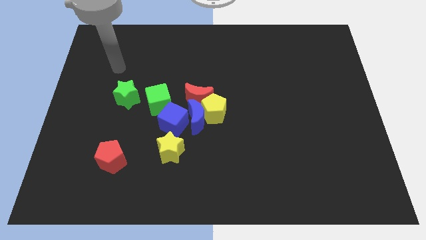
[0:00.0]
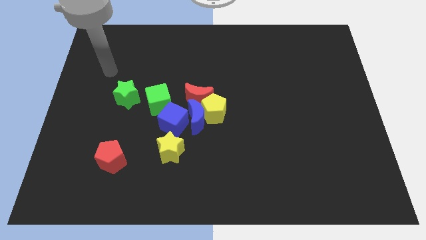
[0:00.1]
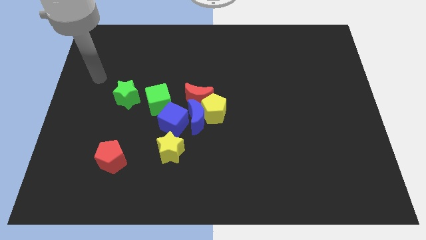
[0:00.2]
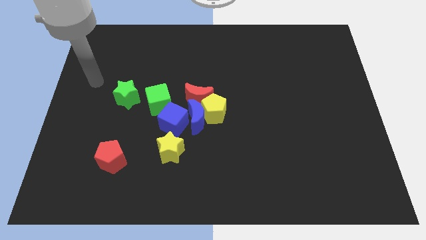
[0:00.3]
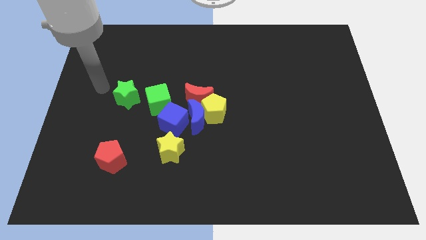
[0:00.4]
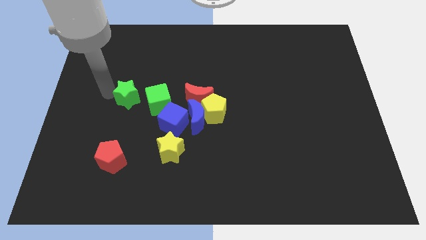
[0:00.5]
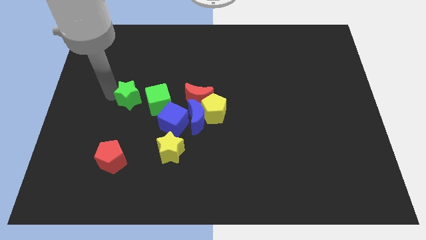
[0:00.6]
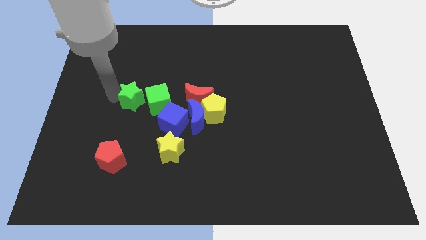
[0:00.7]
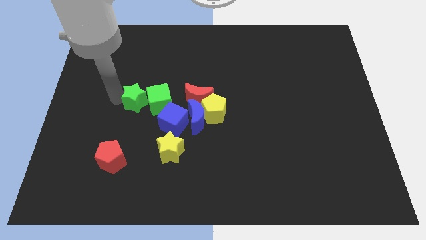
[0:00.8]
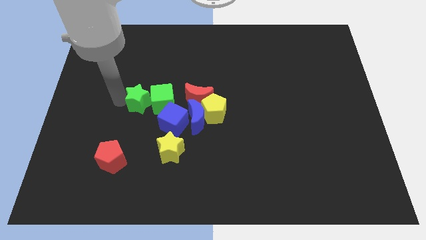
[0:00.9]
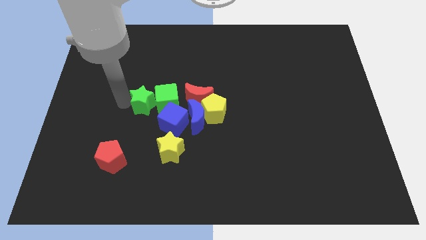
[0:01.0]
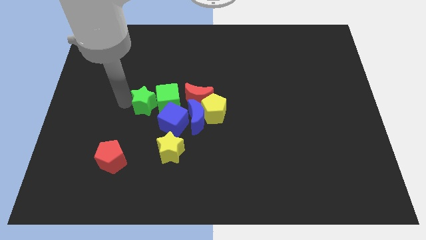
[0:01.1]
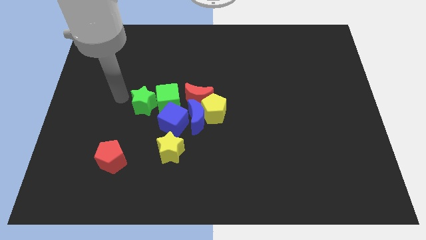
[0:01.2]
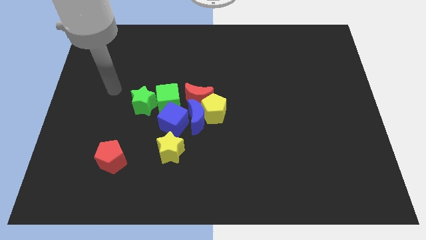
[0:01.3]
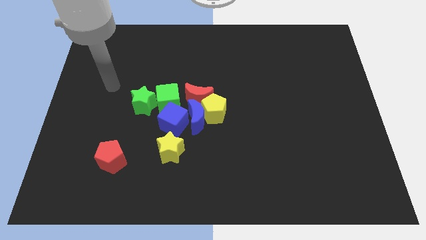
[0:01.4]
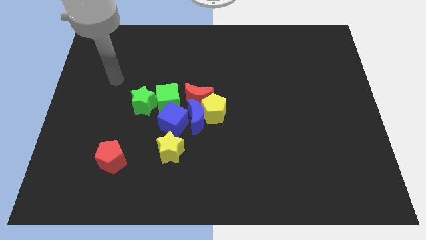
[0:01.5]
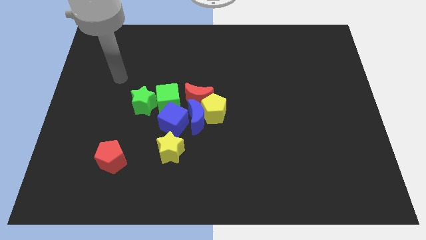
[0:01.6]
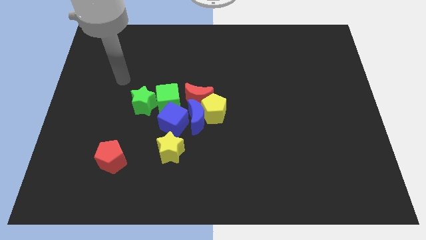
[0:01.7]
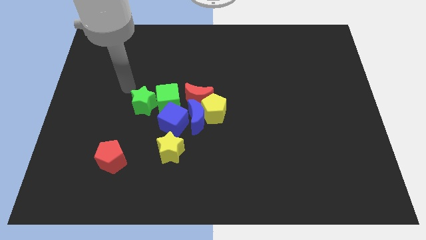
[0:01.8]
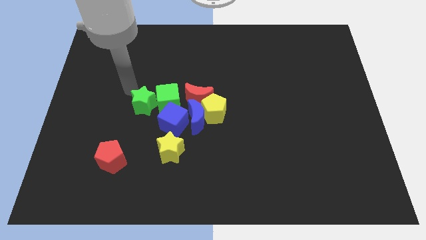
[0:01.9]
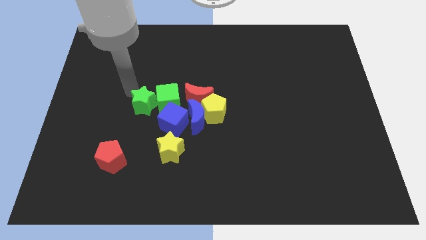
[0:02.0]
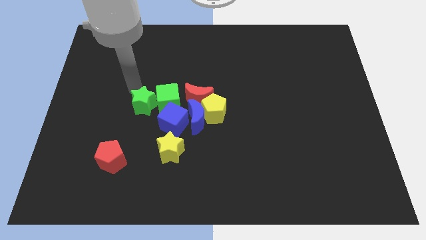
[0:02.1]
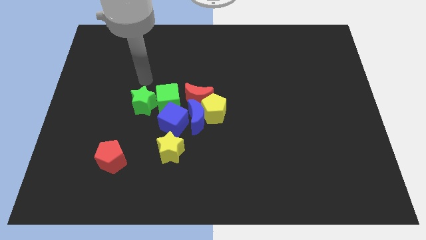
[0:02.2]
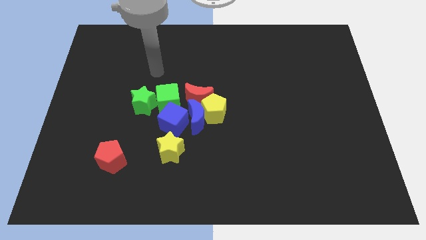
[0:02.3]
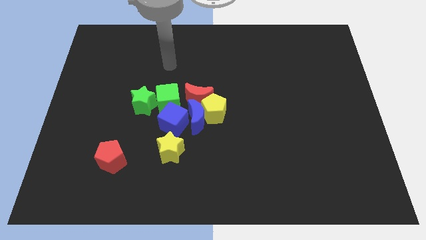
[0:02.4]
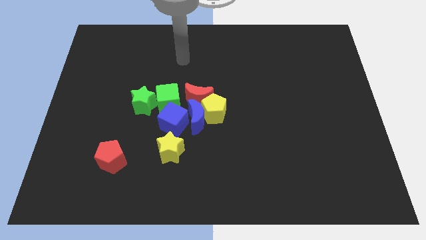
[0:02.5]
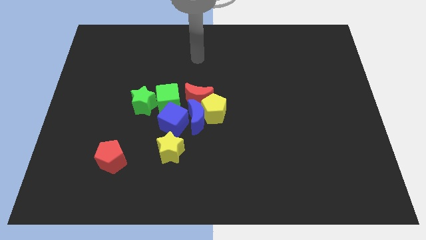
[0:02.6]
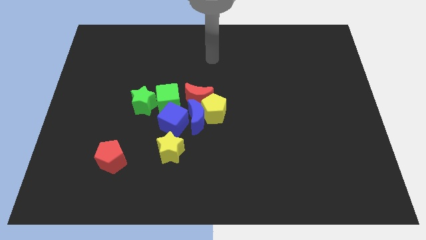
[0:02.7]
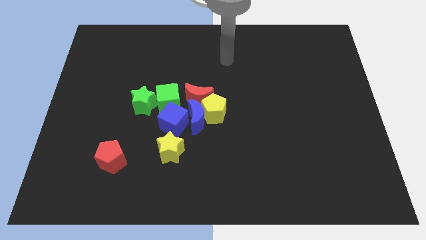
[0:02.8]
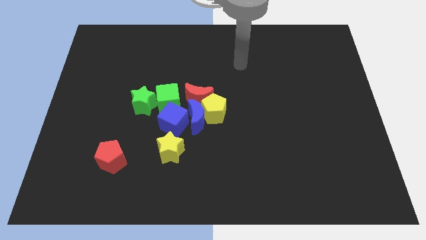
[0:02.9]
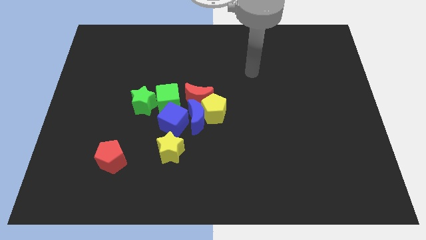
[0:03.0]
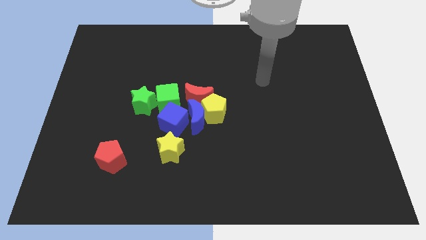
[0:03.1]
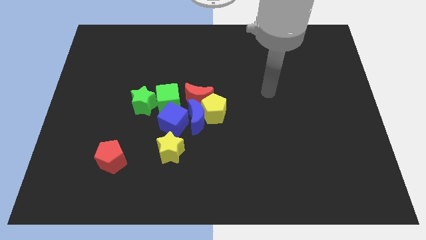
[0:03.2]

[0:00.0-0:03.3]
place green star to the left of the green cube

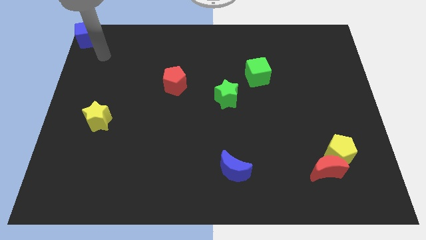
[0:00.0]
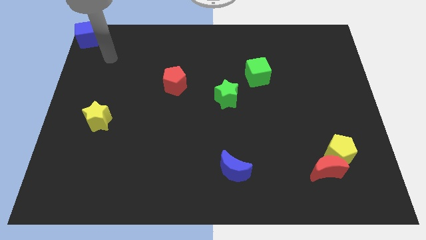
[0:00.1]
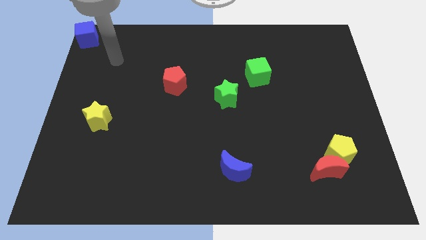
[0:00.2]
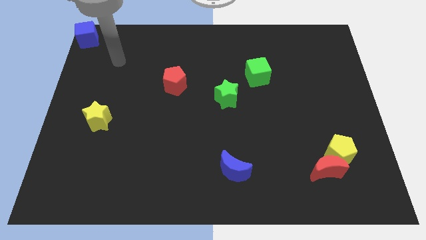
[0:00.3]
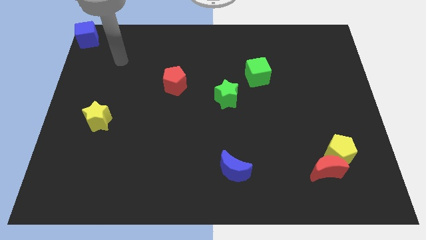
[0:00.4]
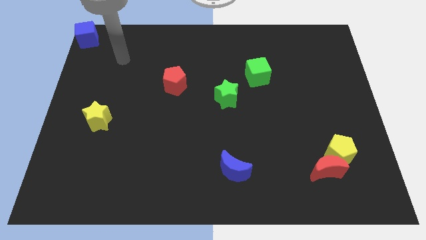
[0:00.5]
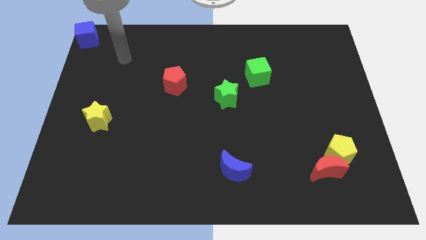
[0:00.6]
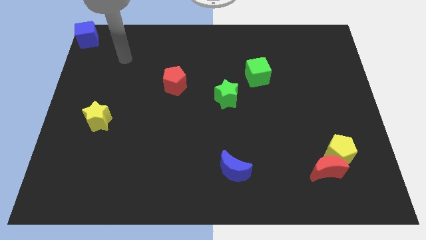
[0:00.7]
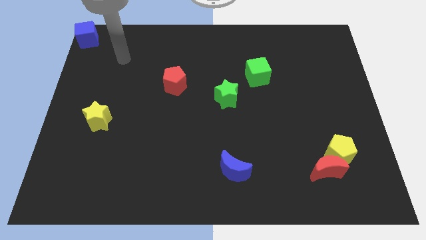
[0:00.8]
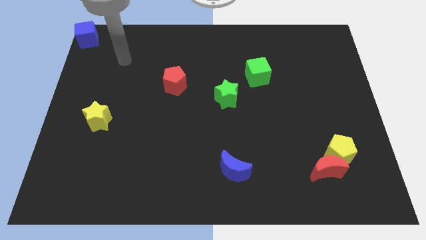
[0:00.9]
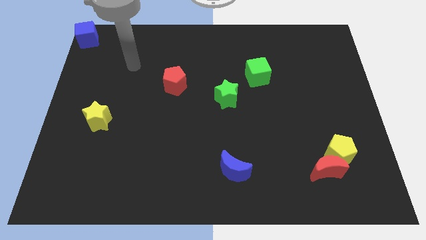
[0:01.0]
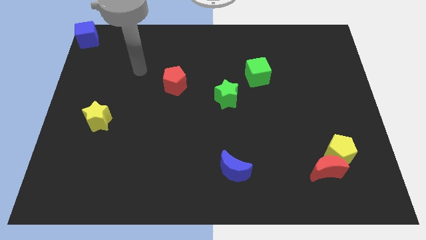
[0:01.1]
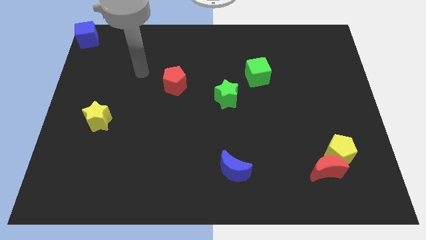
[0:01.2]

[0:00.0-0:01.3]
move the arm away from the blue cube

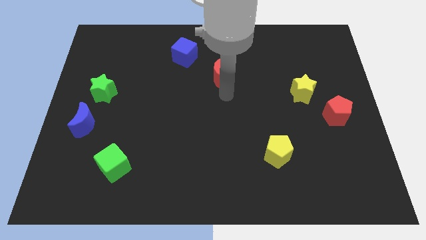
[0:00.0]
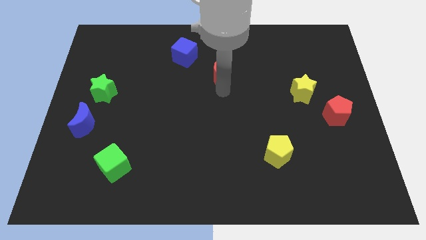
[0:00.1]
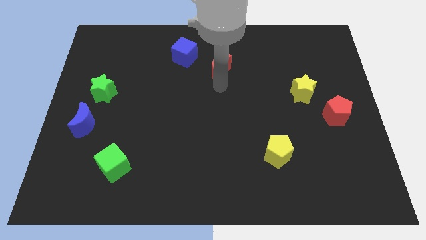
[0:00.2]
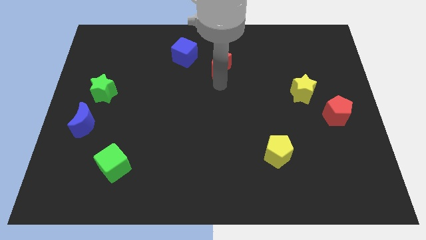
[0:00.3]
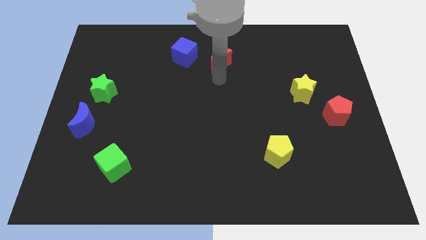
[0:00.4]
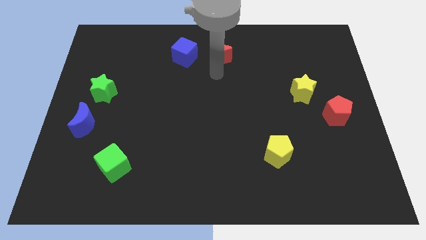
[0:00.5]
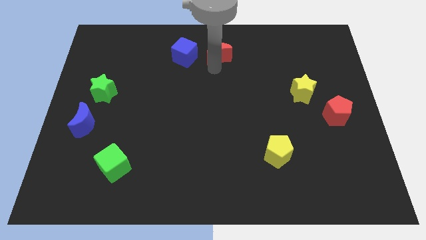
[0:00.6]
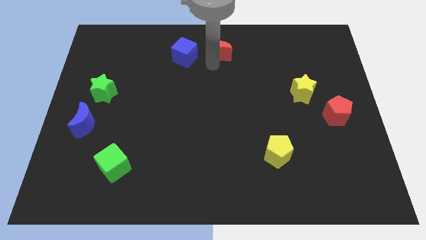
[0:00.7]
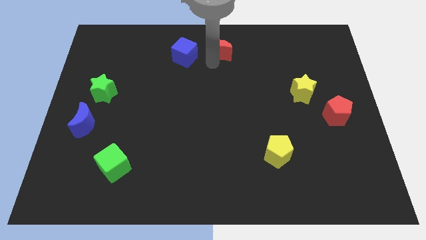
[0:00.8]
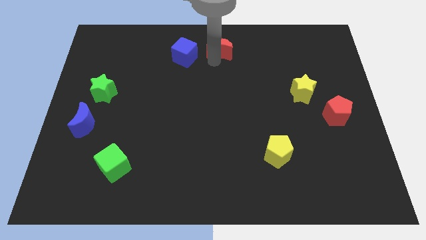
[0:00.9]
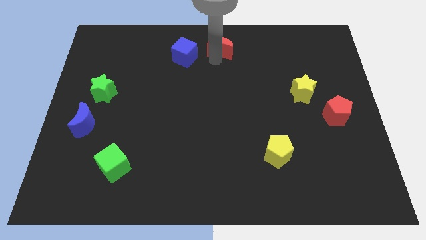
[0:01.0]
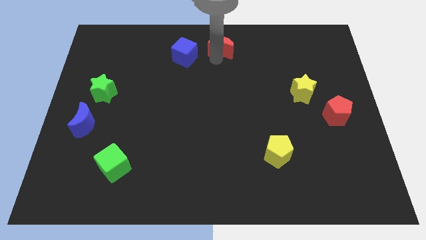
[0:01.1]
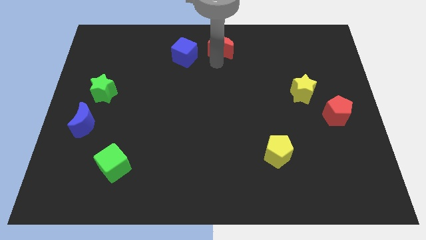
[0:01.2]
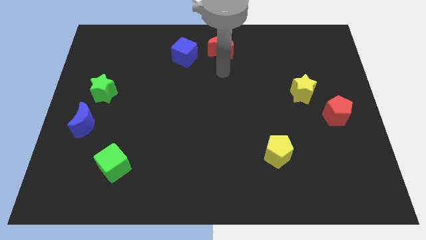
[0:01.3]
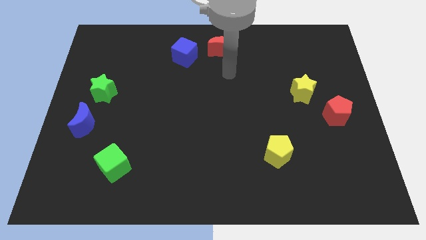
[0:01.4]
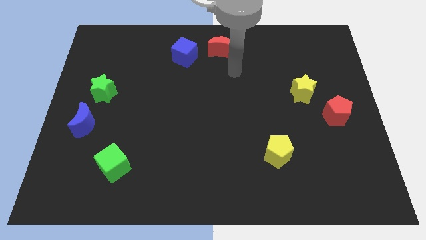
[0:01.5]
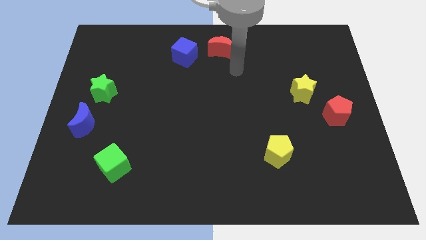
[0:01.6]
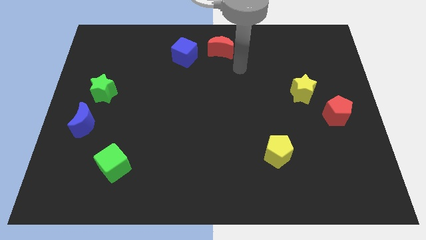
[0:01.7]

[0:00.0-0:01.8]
place red moon to the top center of the board

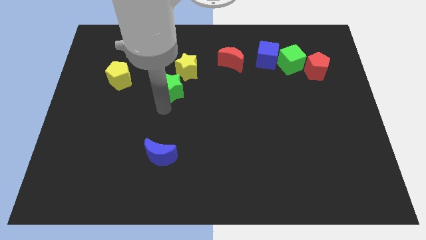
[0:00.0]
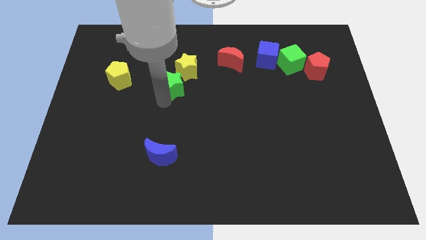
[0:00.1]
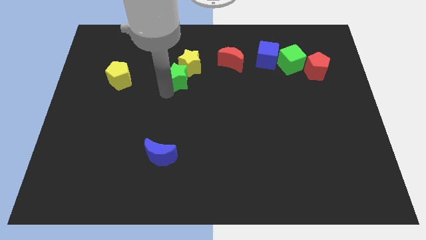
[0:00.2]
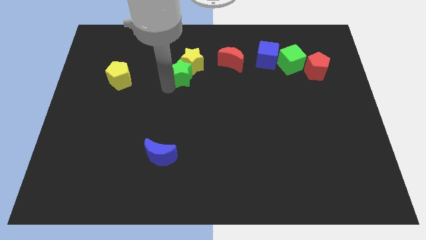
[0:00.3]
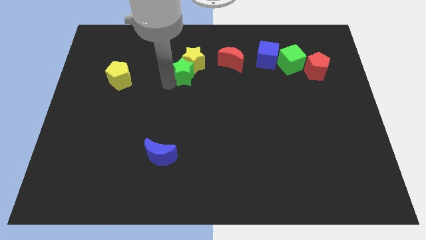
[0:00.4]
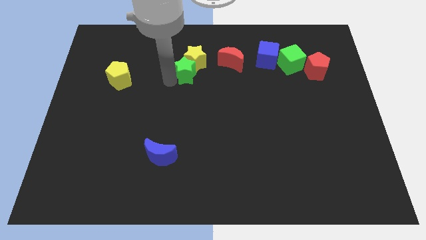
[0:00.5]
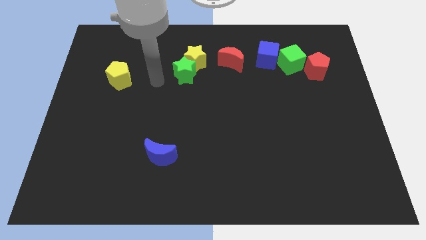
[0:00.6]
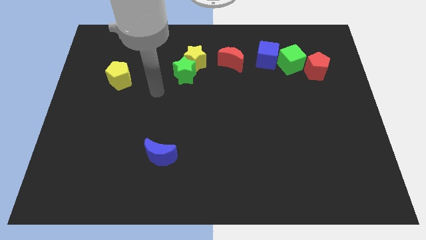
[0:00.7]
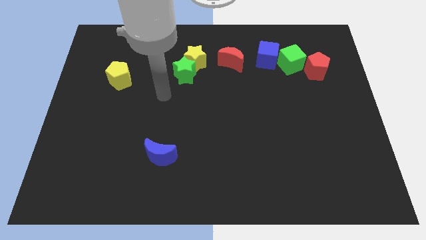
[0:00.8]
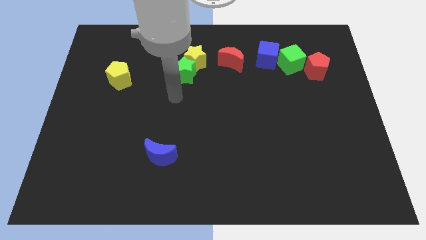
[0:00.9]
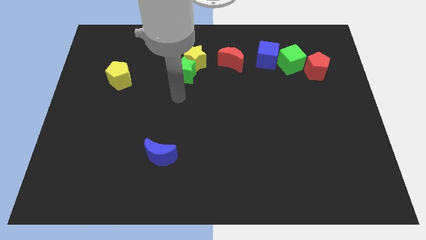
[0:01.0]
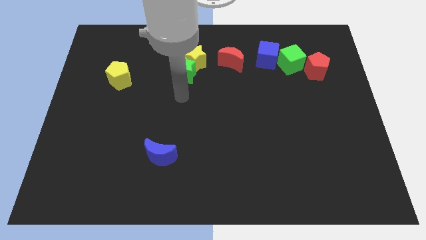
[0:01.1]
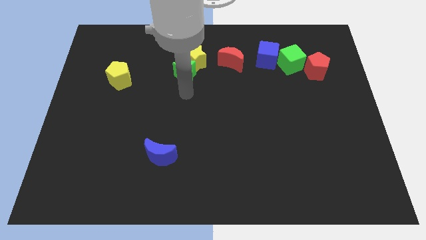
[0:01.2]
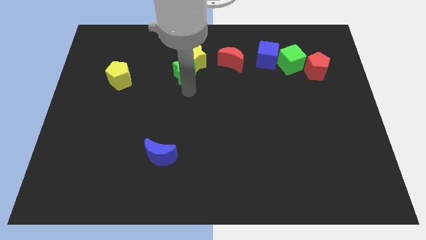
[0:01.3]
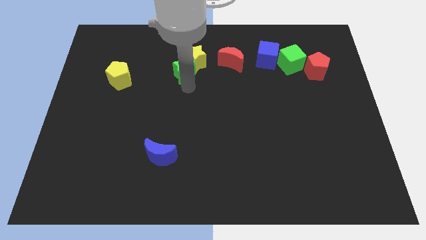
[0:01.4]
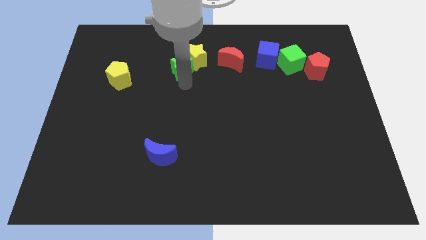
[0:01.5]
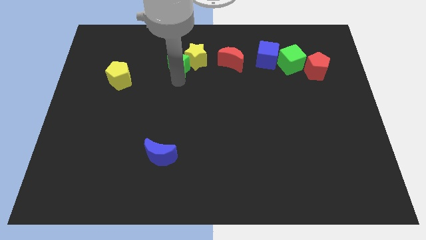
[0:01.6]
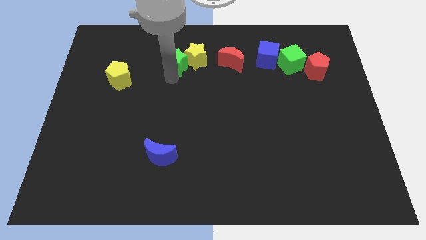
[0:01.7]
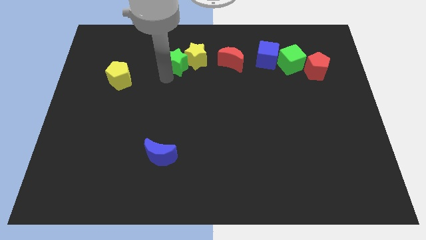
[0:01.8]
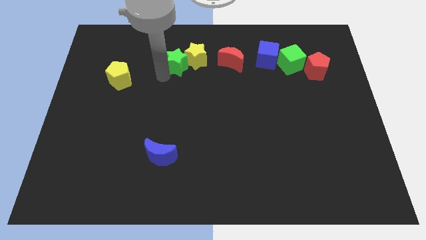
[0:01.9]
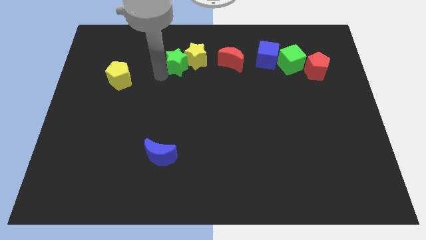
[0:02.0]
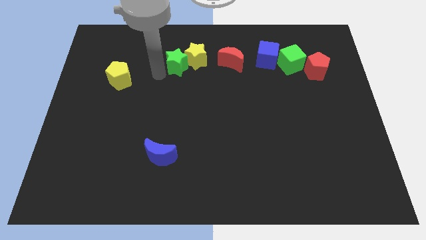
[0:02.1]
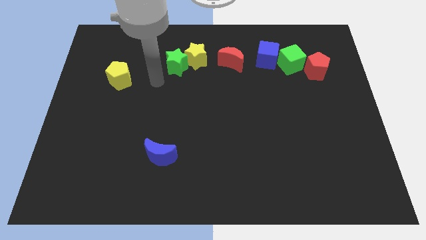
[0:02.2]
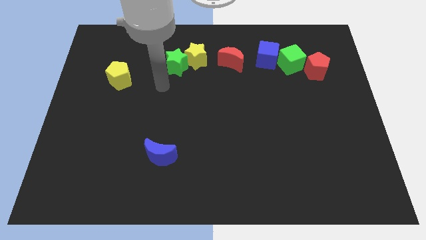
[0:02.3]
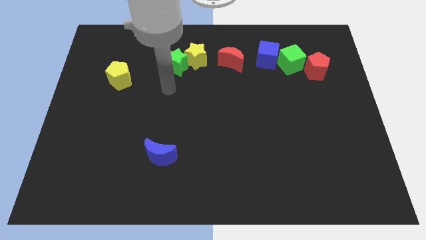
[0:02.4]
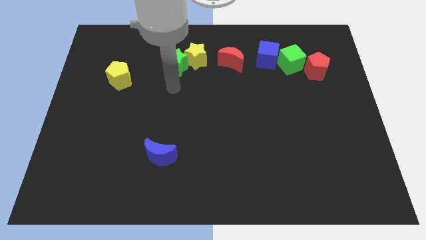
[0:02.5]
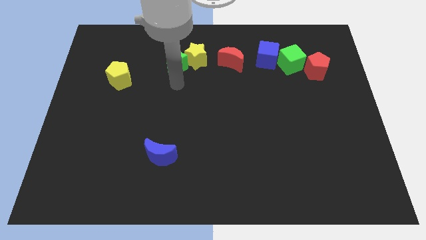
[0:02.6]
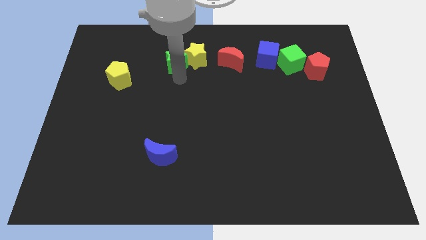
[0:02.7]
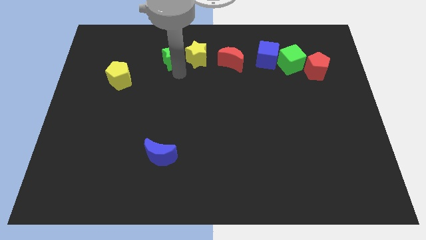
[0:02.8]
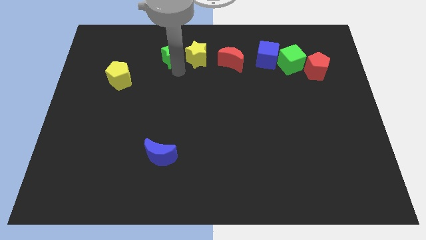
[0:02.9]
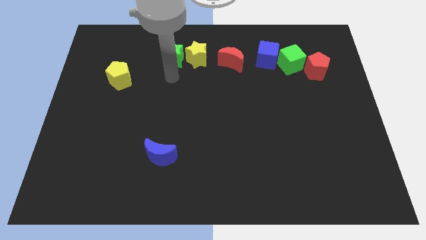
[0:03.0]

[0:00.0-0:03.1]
place the yellow star along with the green star to the left of the red moon
